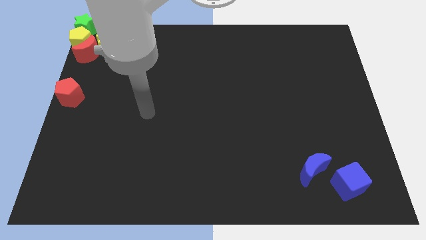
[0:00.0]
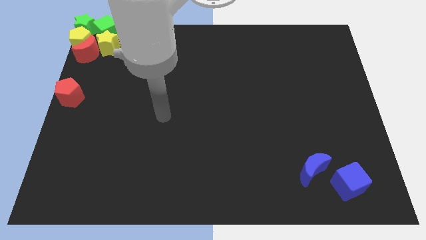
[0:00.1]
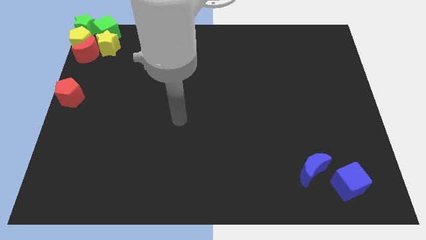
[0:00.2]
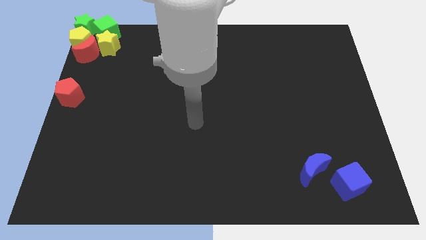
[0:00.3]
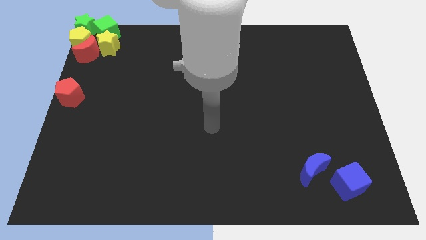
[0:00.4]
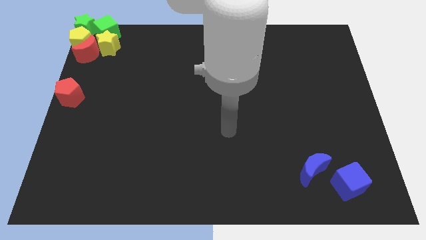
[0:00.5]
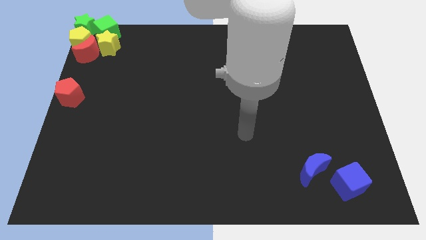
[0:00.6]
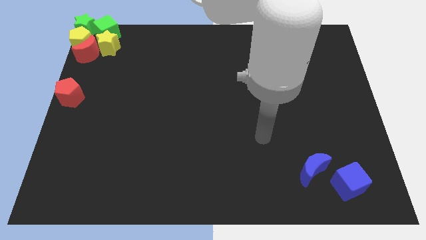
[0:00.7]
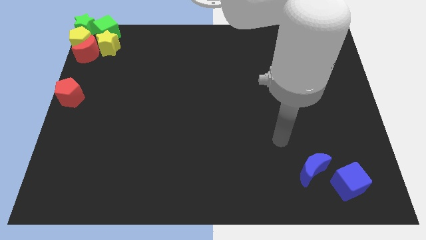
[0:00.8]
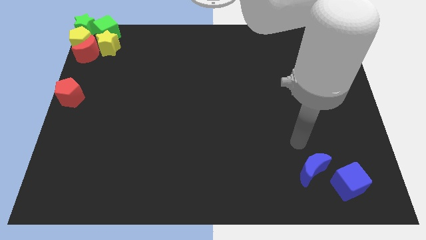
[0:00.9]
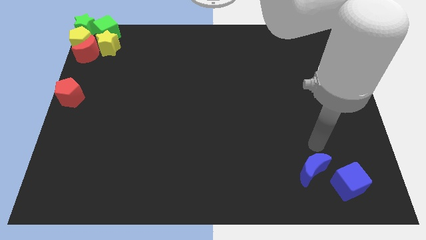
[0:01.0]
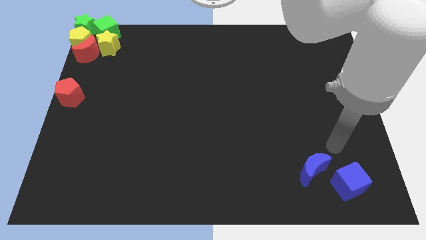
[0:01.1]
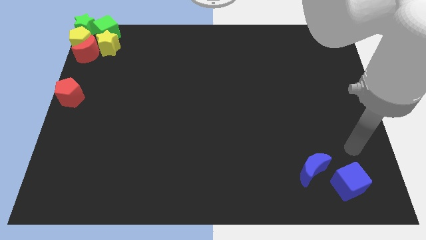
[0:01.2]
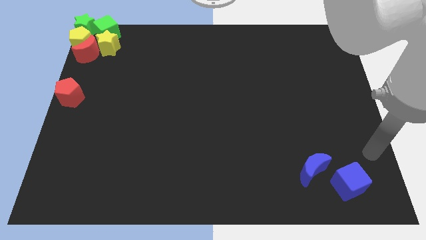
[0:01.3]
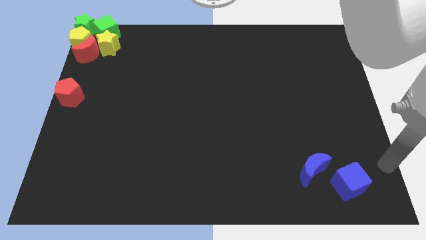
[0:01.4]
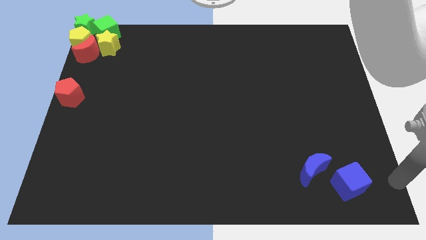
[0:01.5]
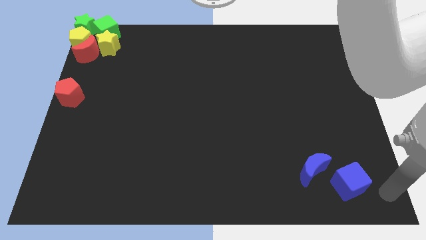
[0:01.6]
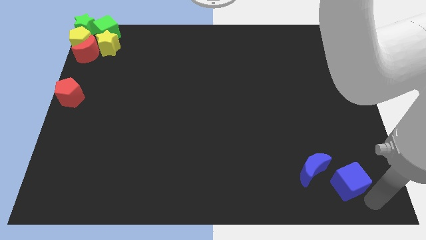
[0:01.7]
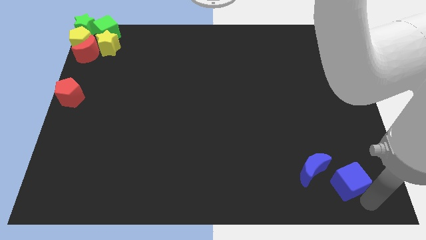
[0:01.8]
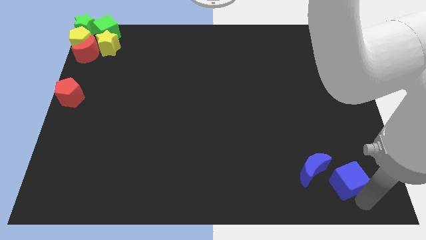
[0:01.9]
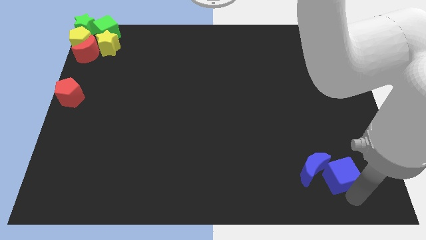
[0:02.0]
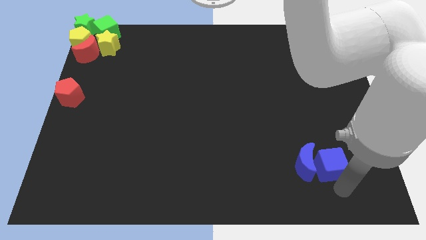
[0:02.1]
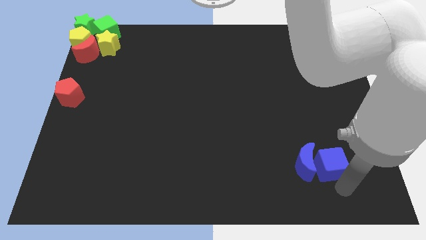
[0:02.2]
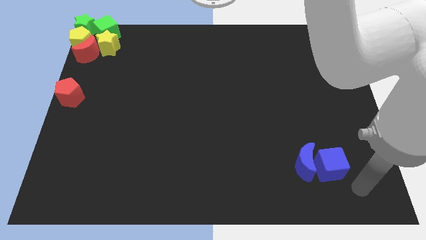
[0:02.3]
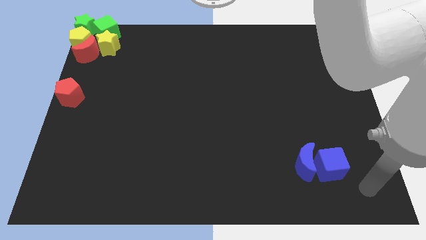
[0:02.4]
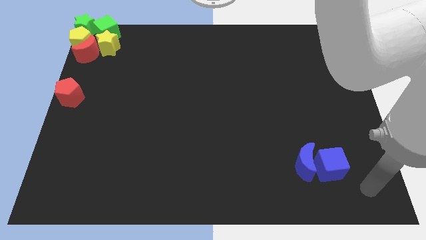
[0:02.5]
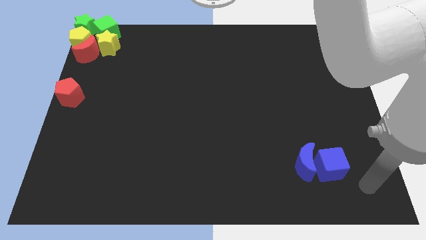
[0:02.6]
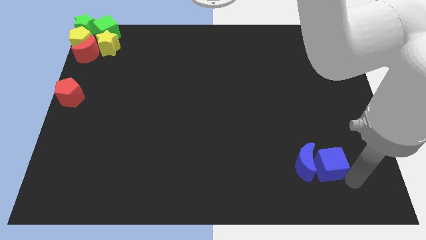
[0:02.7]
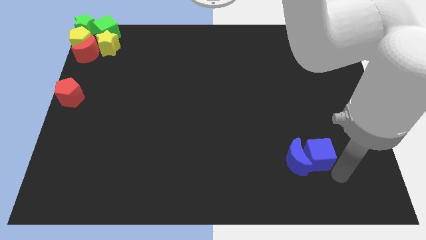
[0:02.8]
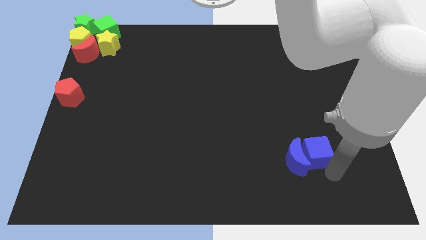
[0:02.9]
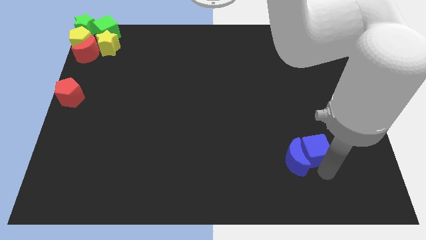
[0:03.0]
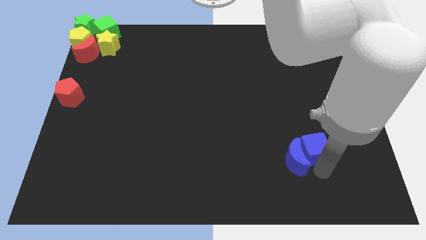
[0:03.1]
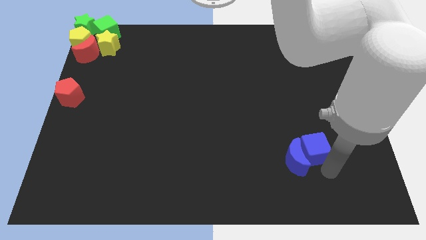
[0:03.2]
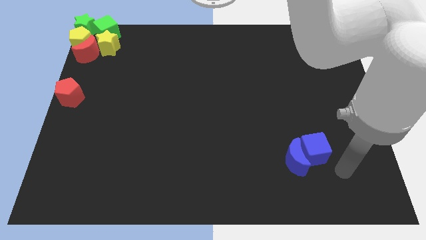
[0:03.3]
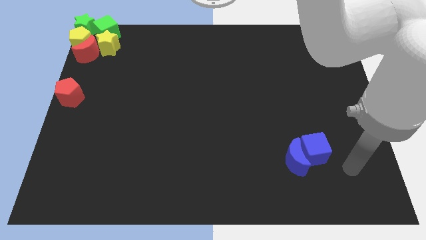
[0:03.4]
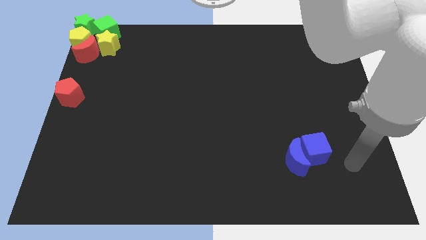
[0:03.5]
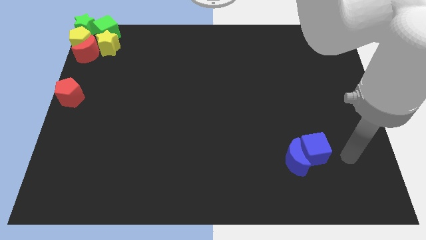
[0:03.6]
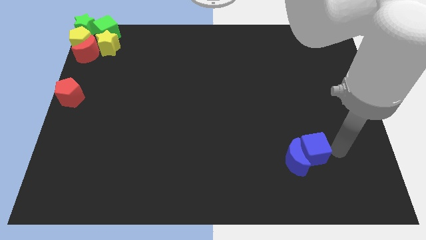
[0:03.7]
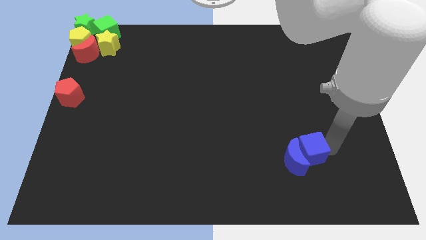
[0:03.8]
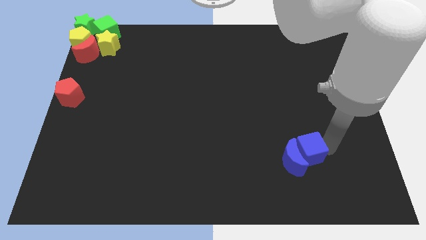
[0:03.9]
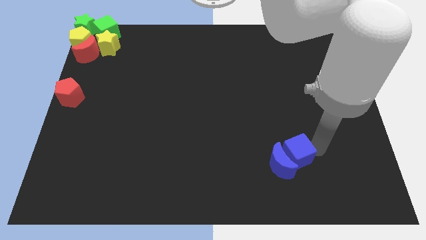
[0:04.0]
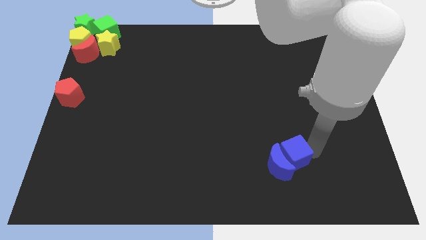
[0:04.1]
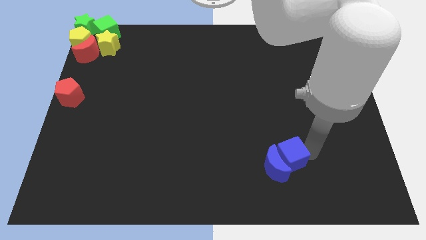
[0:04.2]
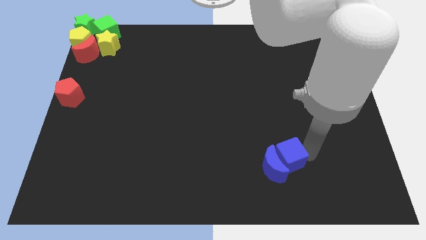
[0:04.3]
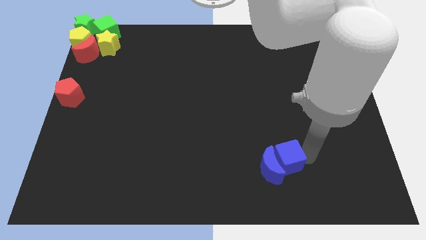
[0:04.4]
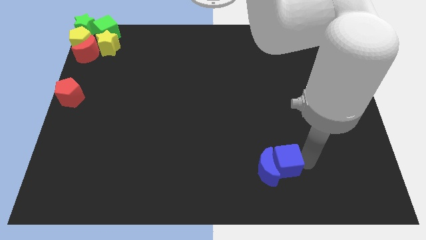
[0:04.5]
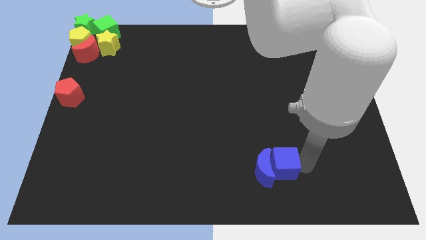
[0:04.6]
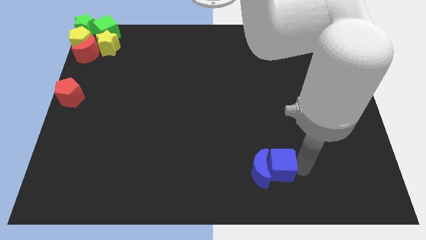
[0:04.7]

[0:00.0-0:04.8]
push the blue cube into the blue moon

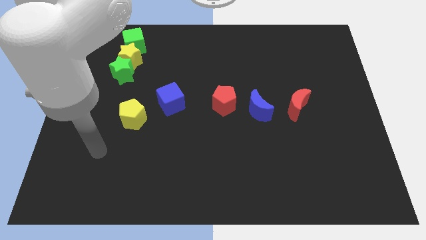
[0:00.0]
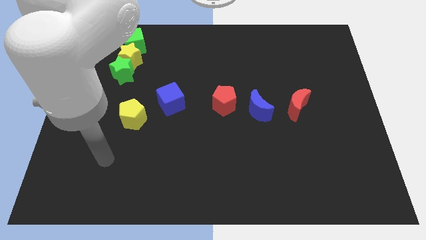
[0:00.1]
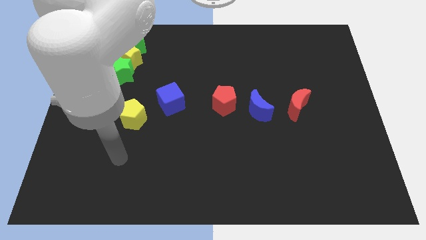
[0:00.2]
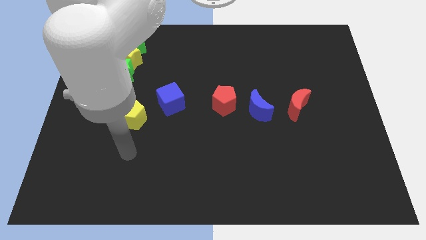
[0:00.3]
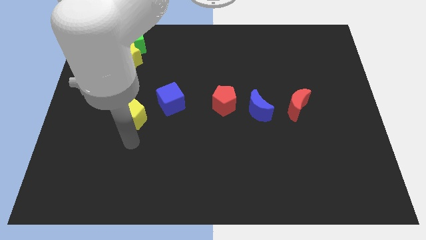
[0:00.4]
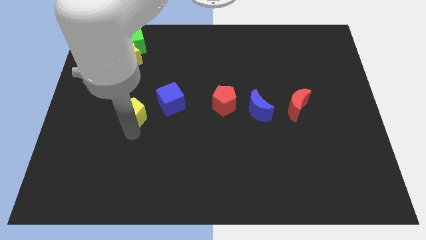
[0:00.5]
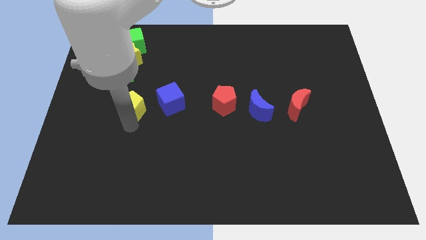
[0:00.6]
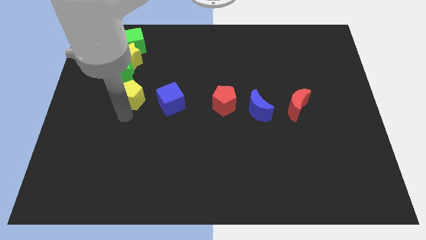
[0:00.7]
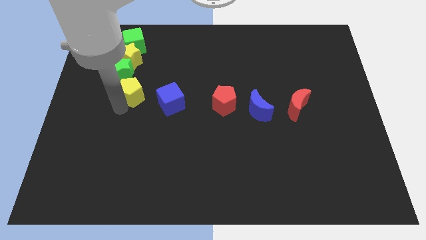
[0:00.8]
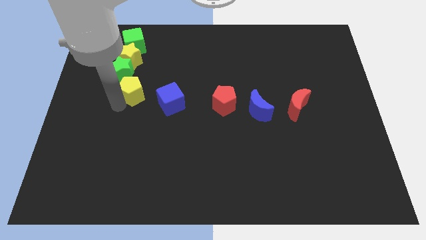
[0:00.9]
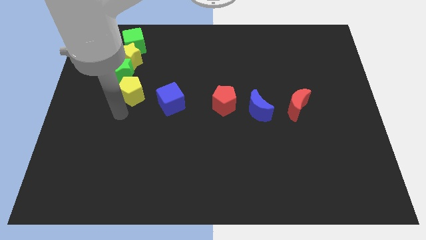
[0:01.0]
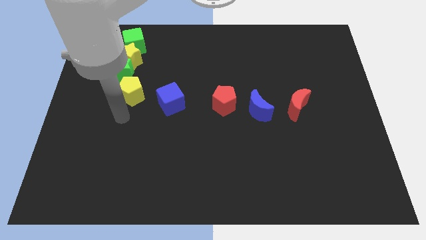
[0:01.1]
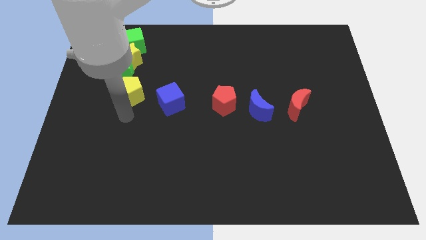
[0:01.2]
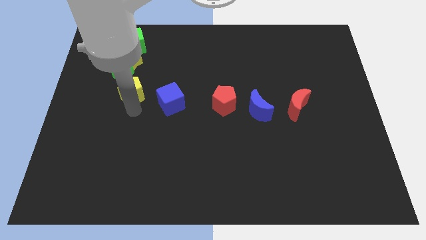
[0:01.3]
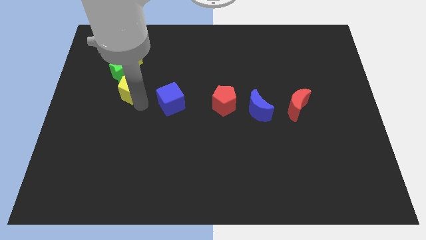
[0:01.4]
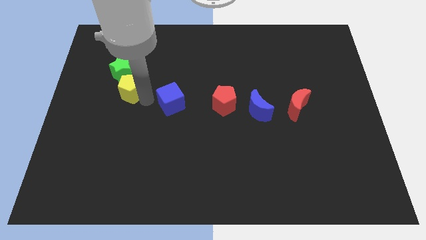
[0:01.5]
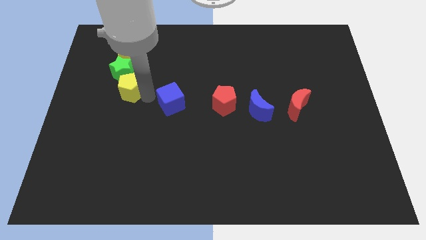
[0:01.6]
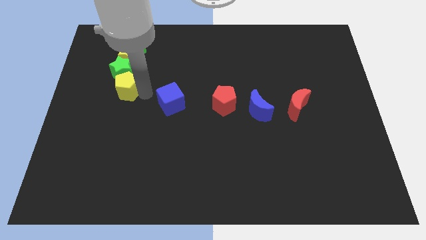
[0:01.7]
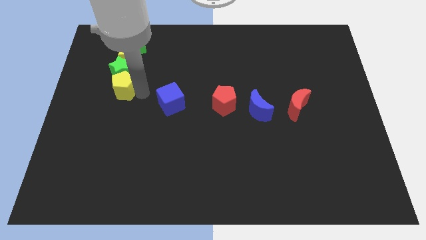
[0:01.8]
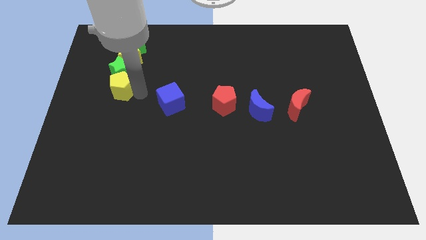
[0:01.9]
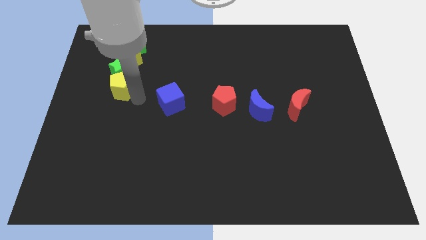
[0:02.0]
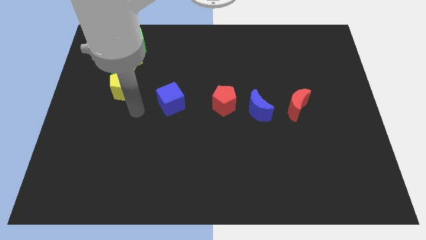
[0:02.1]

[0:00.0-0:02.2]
move the yellow pentagon below the green star

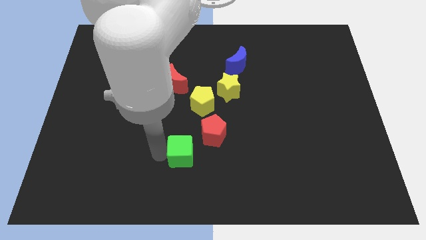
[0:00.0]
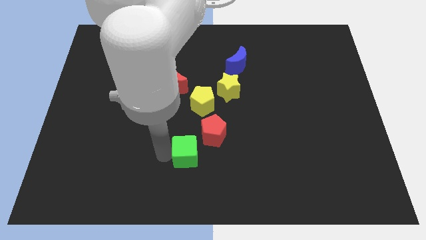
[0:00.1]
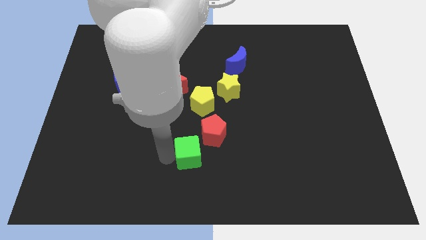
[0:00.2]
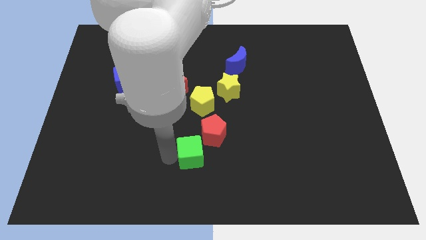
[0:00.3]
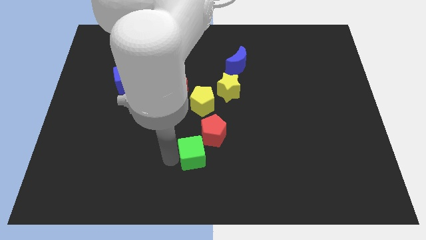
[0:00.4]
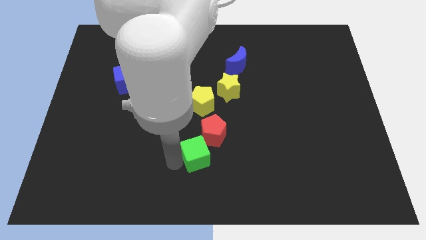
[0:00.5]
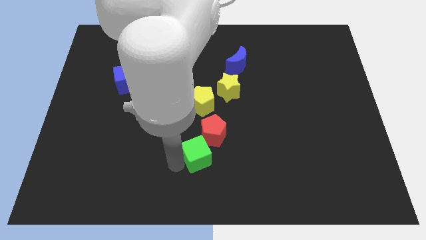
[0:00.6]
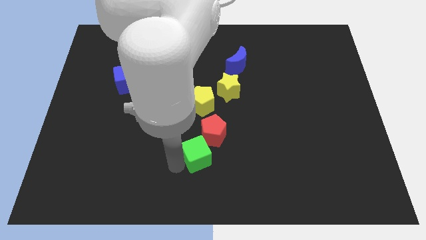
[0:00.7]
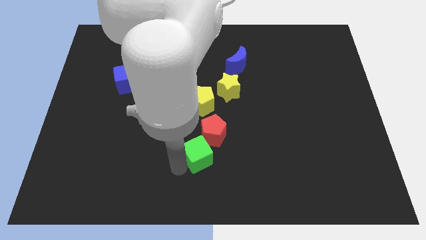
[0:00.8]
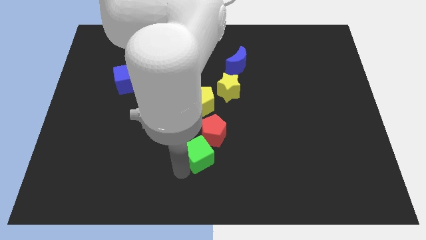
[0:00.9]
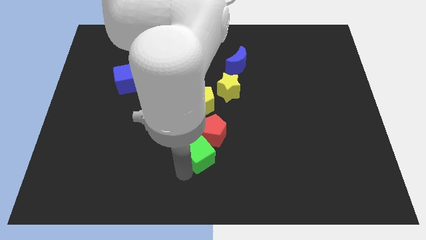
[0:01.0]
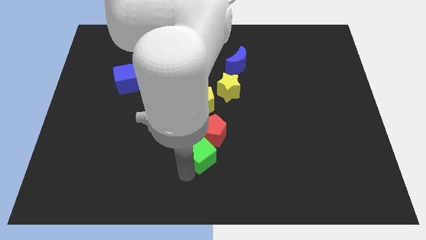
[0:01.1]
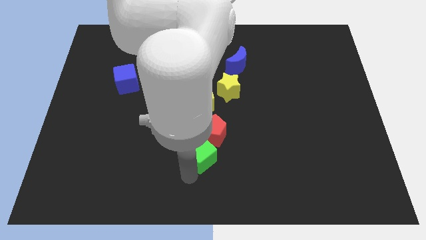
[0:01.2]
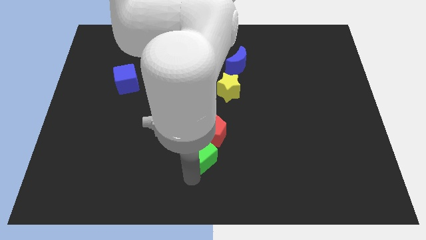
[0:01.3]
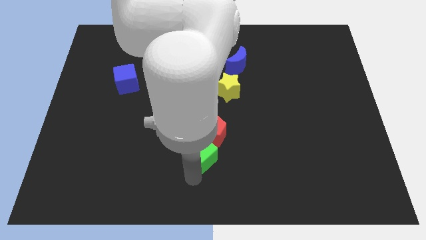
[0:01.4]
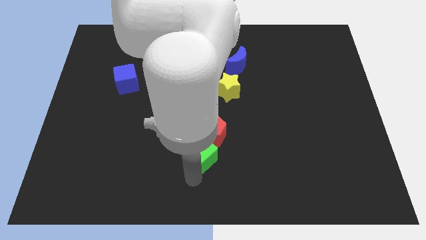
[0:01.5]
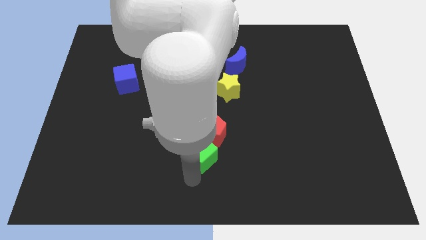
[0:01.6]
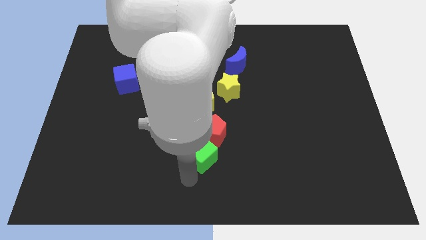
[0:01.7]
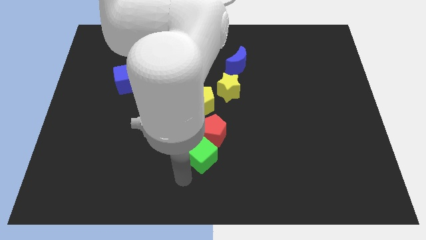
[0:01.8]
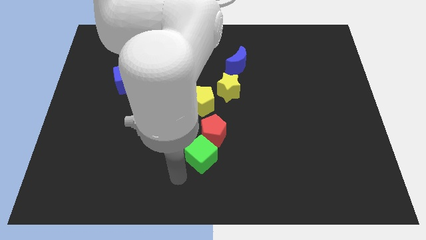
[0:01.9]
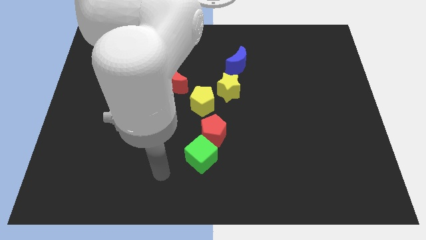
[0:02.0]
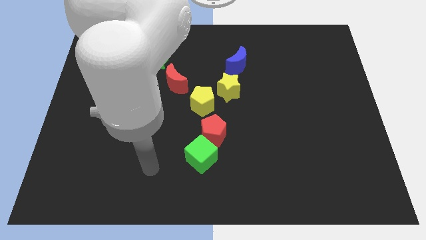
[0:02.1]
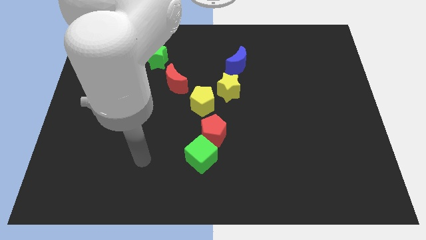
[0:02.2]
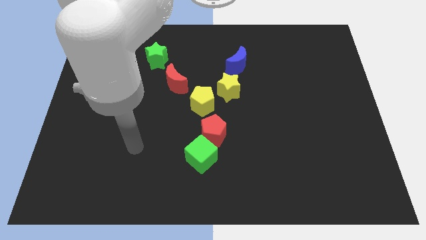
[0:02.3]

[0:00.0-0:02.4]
put the green cube below the red pentagon
